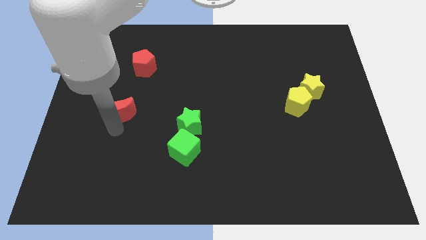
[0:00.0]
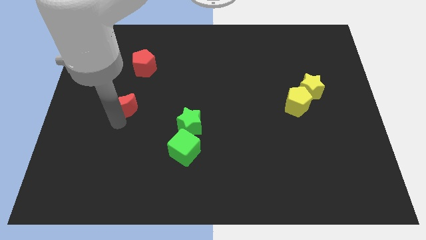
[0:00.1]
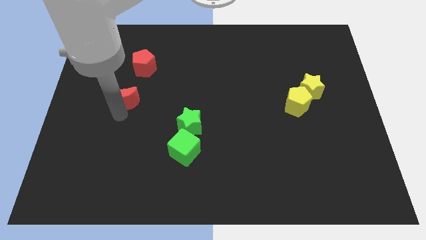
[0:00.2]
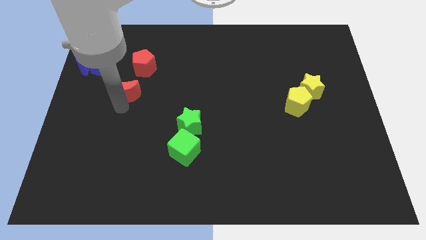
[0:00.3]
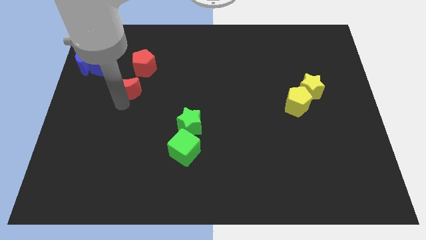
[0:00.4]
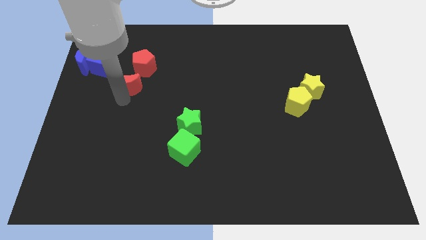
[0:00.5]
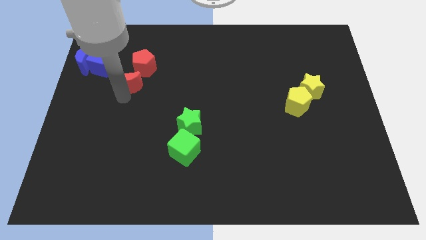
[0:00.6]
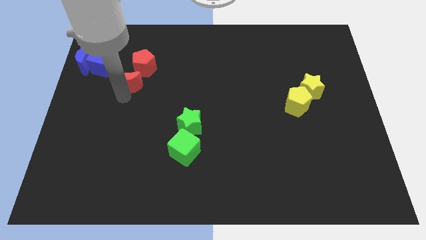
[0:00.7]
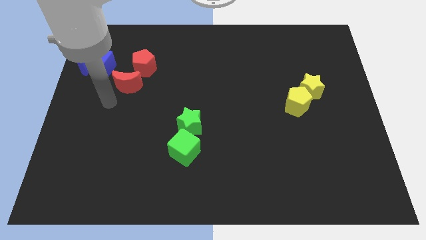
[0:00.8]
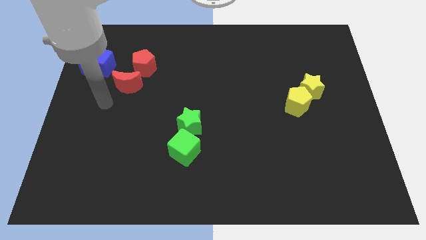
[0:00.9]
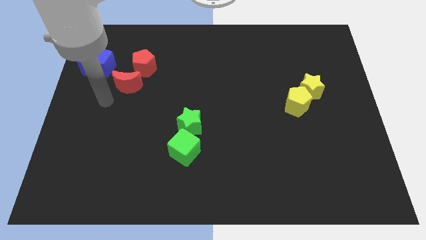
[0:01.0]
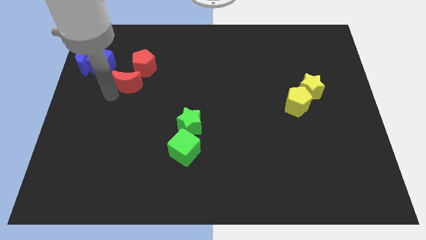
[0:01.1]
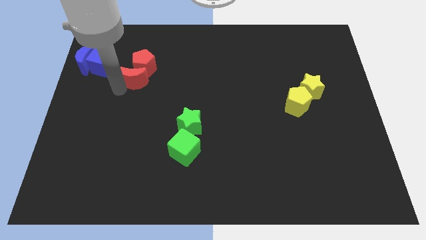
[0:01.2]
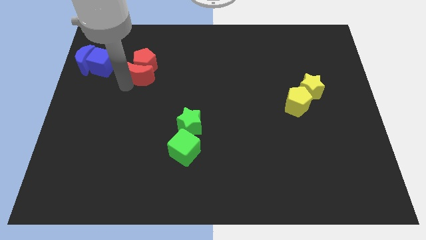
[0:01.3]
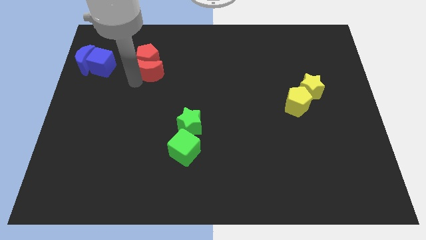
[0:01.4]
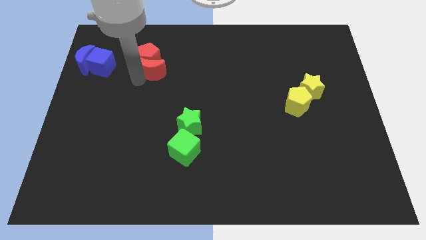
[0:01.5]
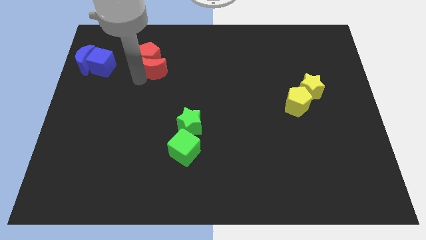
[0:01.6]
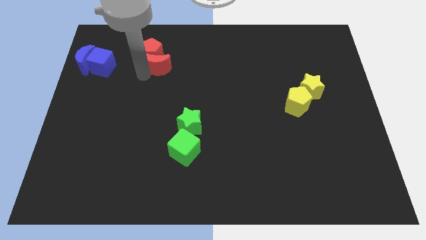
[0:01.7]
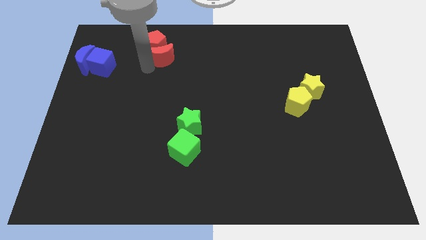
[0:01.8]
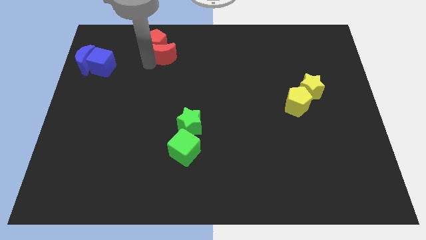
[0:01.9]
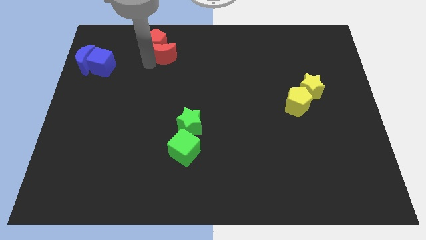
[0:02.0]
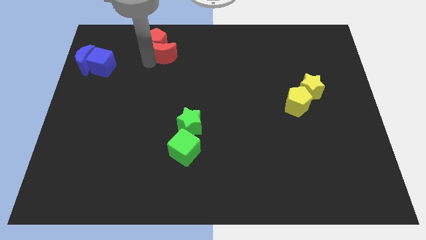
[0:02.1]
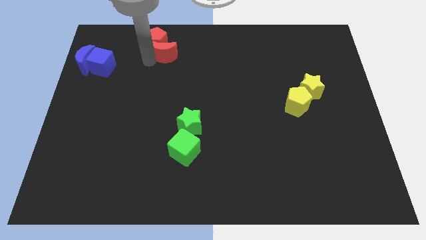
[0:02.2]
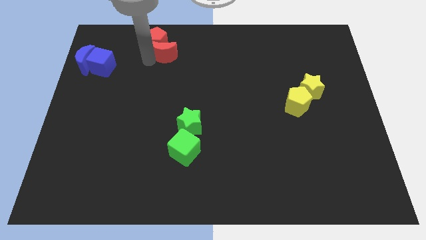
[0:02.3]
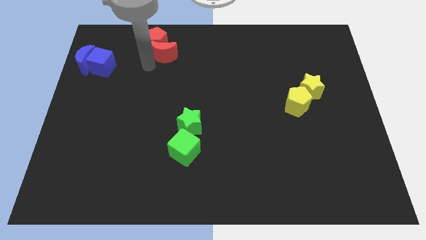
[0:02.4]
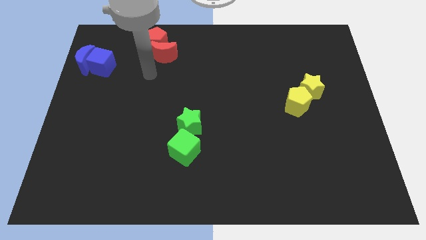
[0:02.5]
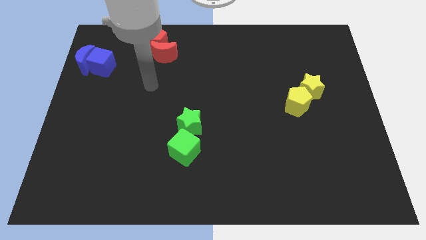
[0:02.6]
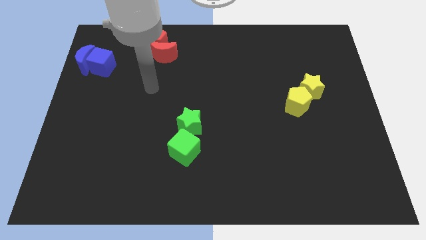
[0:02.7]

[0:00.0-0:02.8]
move the red crescent into the red pentagon

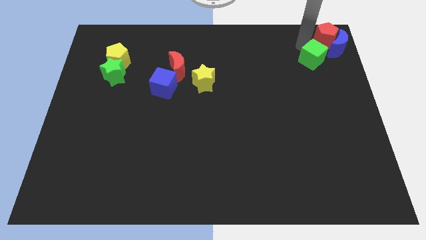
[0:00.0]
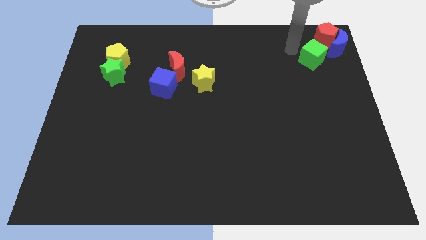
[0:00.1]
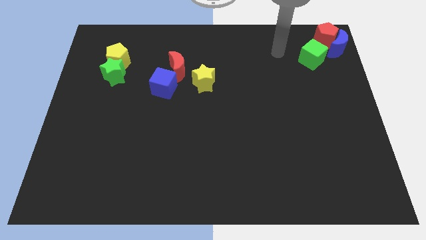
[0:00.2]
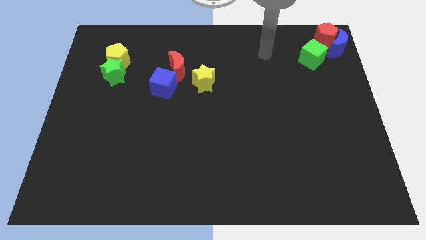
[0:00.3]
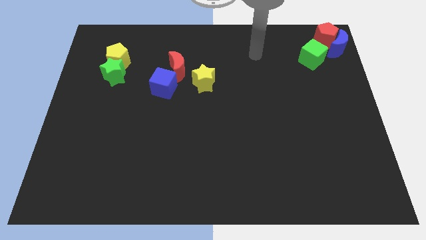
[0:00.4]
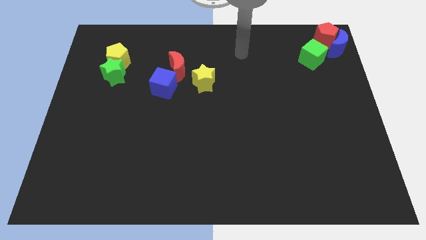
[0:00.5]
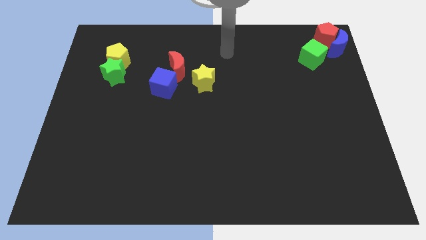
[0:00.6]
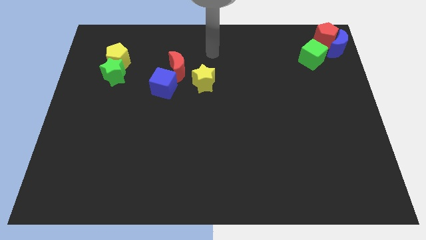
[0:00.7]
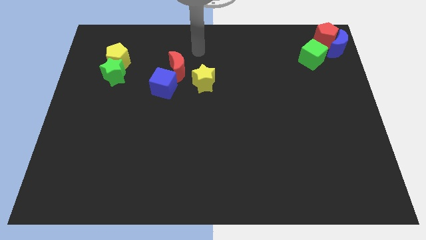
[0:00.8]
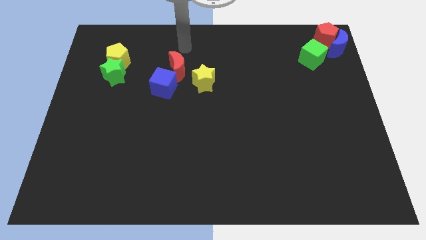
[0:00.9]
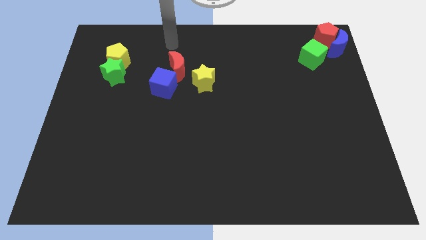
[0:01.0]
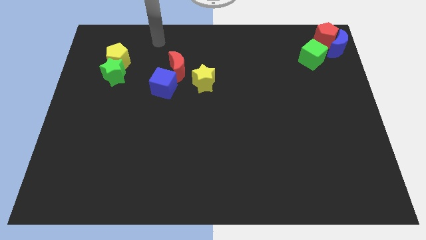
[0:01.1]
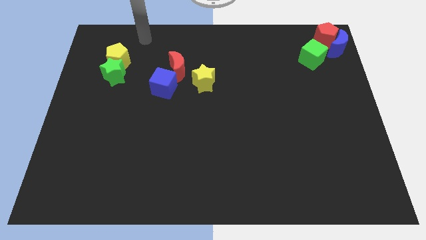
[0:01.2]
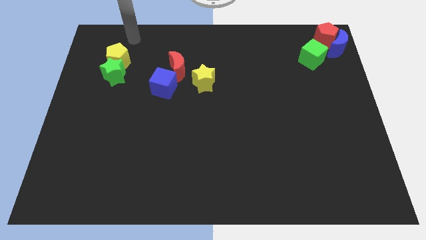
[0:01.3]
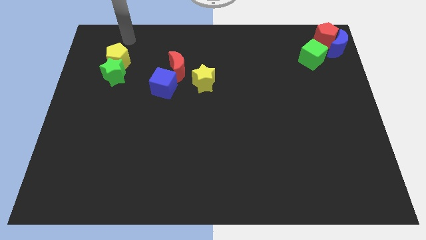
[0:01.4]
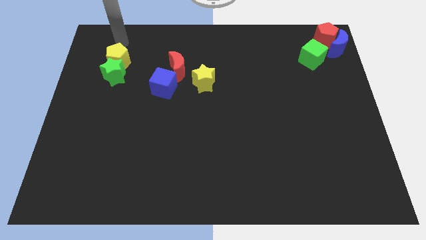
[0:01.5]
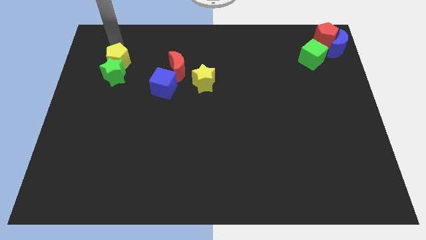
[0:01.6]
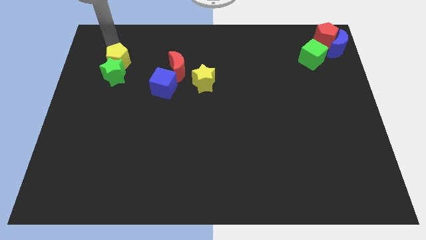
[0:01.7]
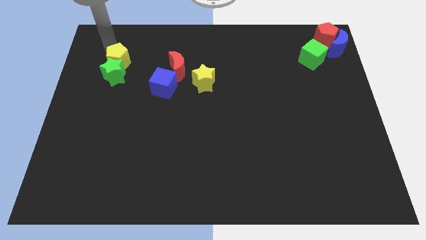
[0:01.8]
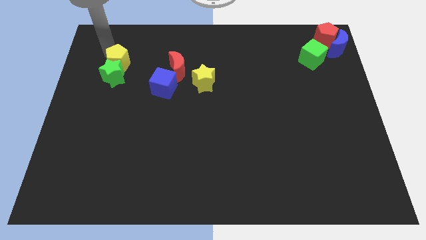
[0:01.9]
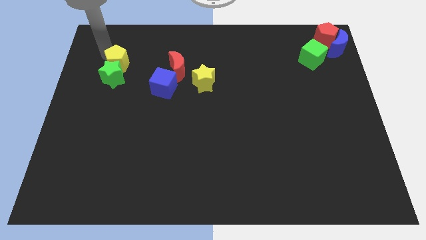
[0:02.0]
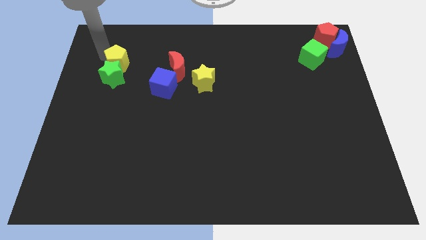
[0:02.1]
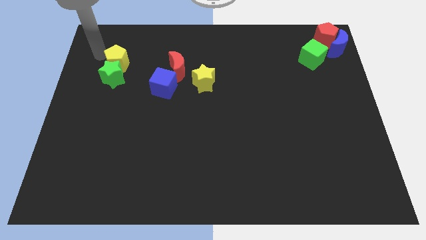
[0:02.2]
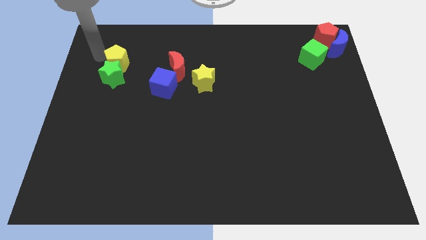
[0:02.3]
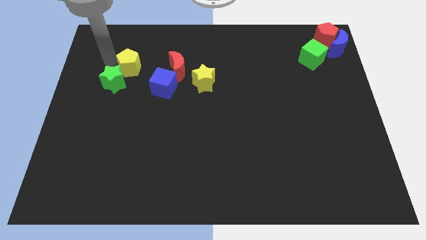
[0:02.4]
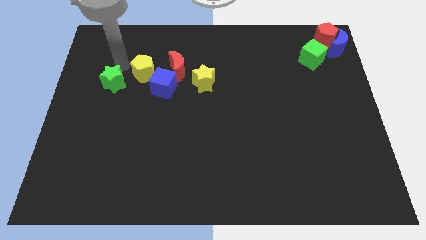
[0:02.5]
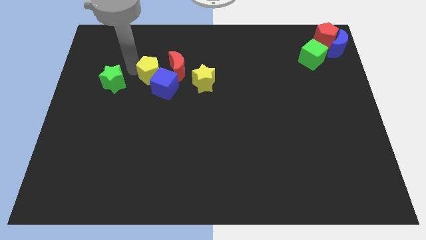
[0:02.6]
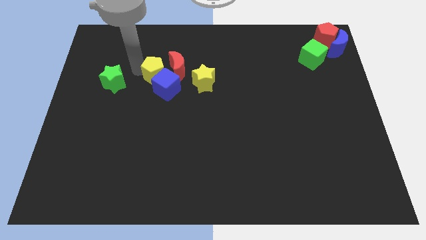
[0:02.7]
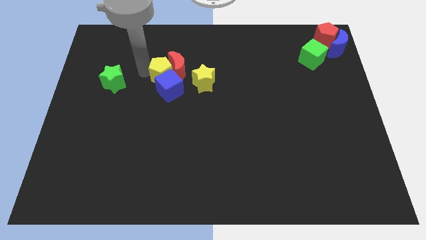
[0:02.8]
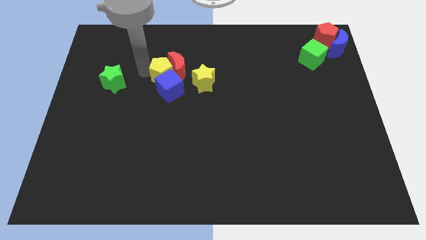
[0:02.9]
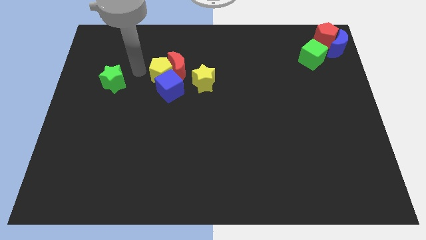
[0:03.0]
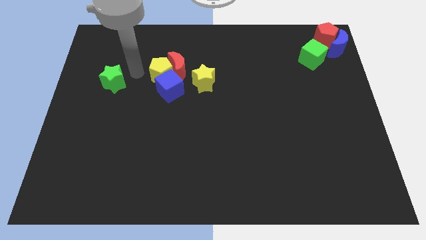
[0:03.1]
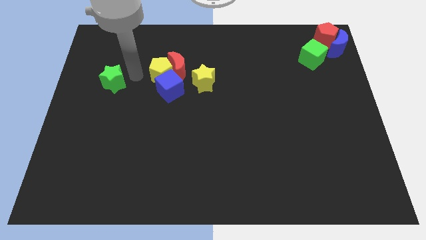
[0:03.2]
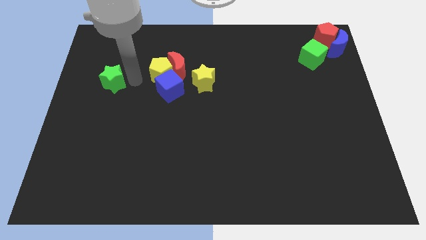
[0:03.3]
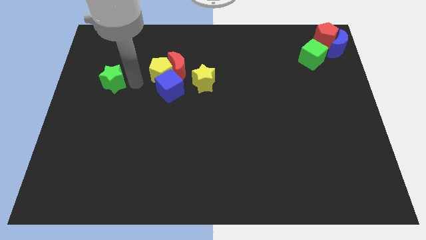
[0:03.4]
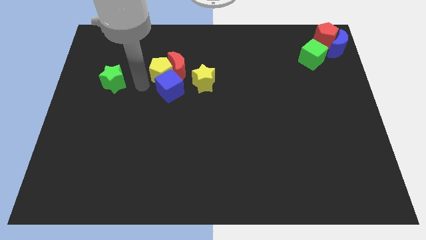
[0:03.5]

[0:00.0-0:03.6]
move the yellow pentagon into the blue cube

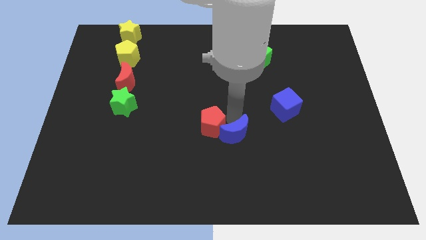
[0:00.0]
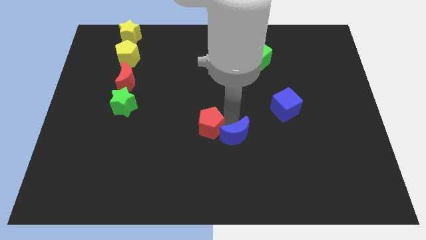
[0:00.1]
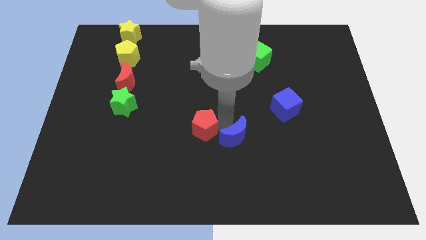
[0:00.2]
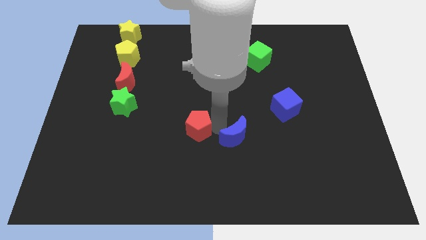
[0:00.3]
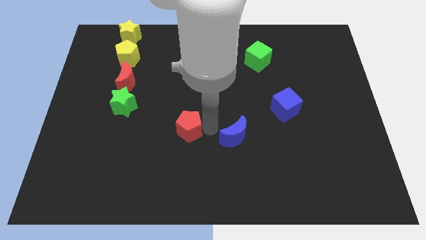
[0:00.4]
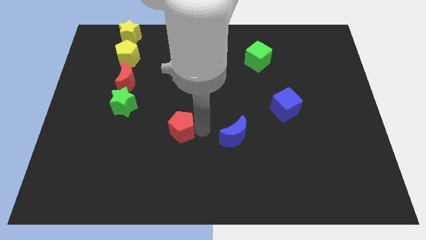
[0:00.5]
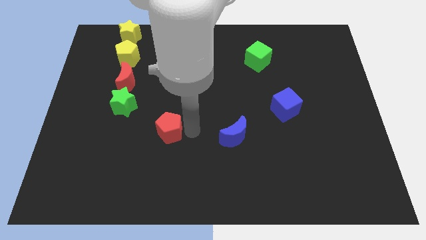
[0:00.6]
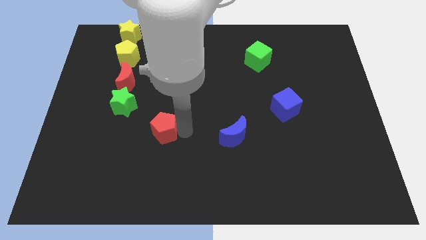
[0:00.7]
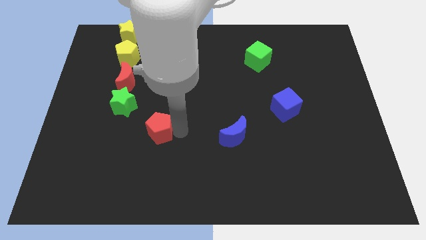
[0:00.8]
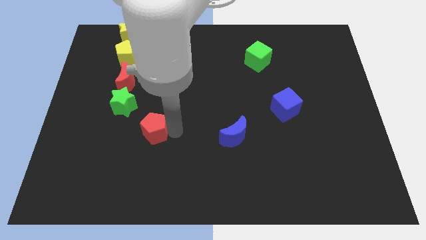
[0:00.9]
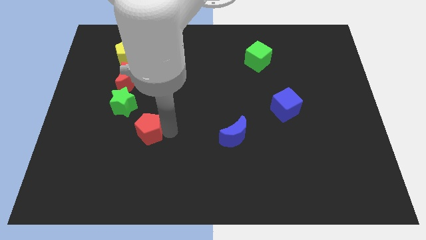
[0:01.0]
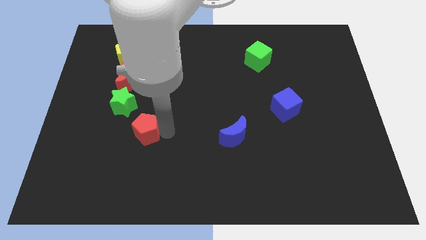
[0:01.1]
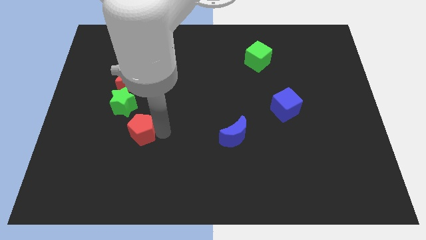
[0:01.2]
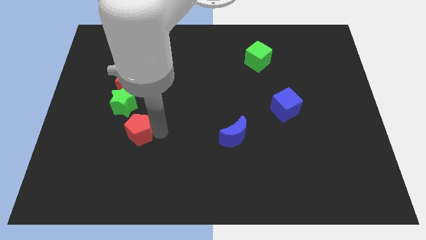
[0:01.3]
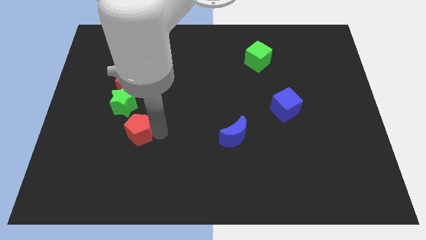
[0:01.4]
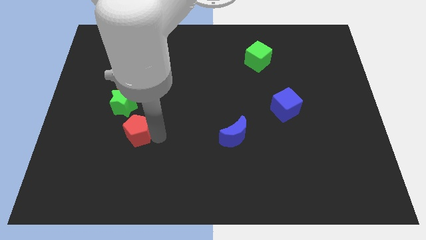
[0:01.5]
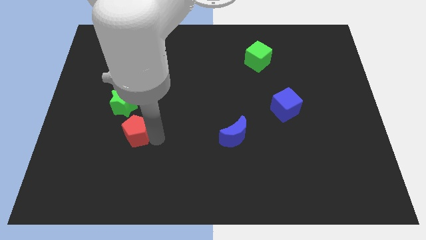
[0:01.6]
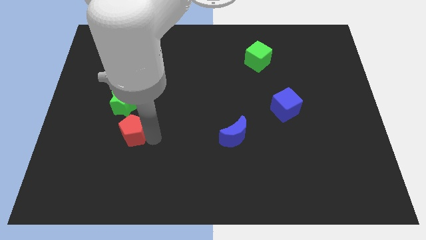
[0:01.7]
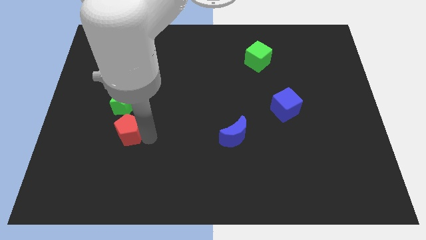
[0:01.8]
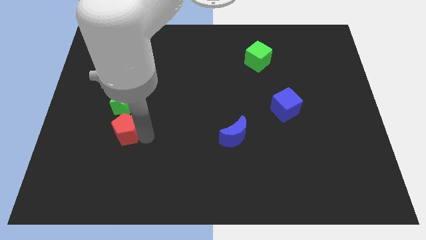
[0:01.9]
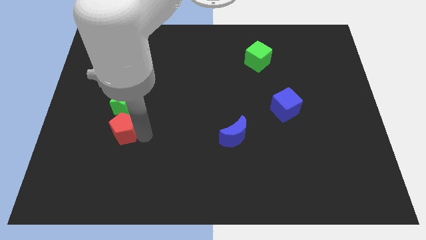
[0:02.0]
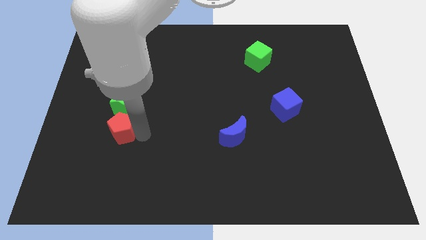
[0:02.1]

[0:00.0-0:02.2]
separate red pentagon from the blue moon

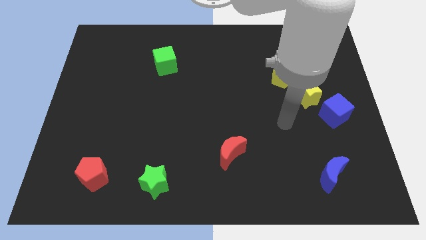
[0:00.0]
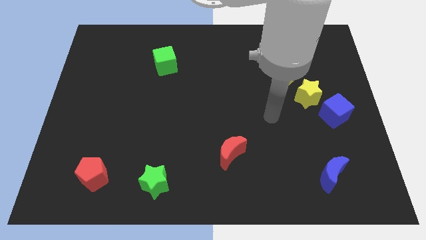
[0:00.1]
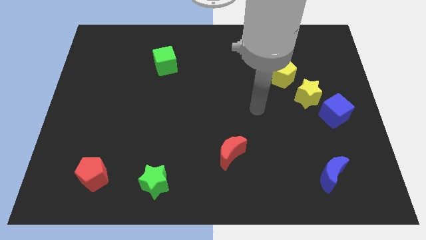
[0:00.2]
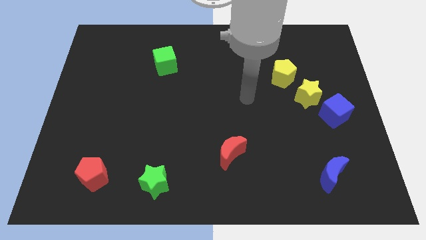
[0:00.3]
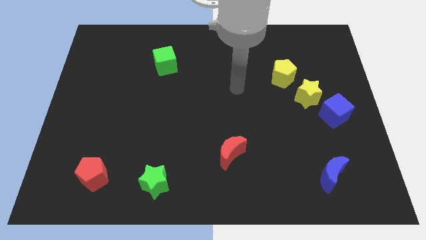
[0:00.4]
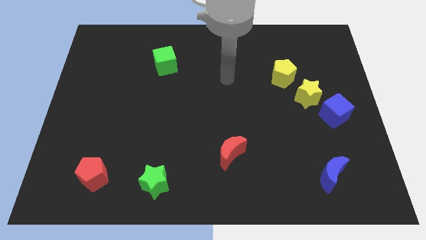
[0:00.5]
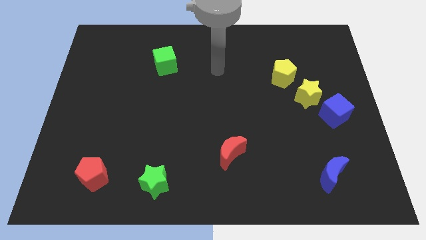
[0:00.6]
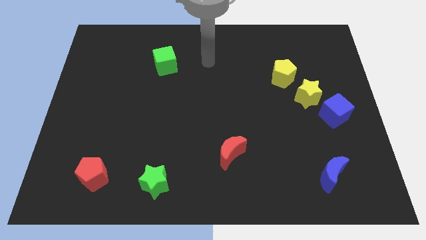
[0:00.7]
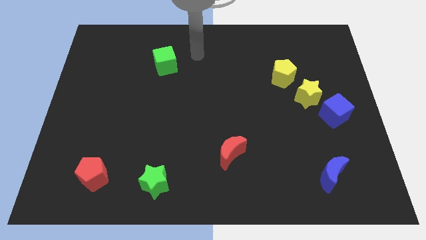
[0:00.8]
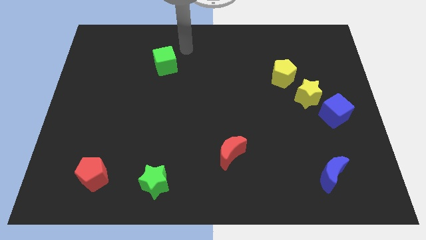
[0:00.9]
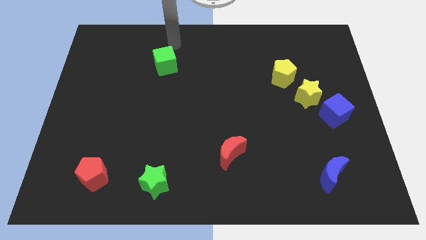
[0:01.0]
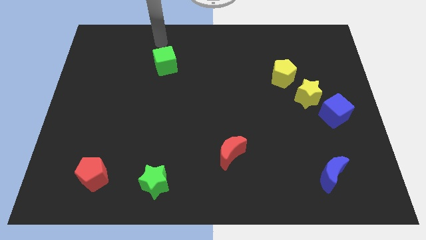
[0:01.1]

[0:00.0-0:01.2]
move the arm to the top of the green cube
